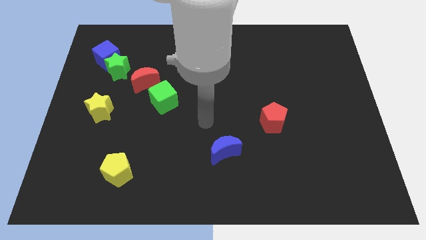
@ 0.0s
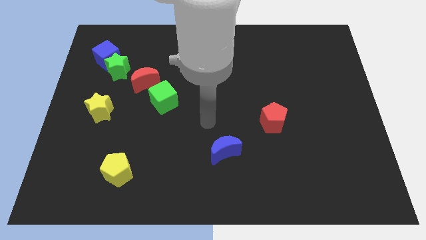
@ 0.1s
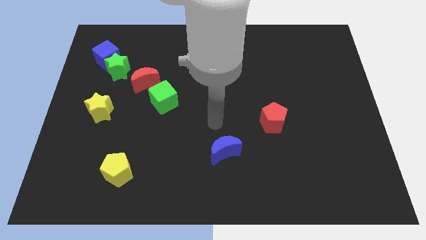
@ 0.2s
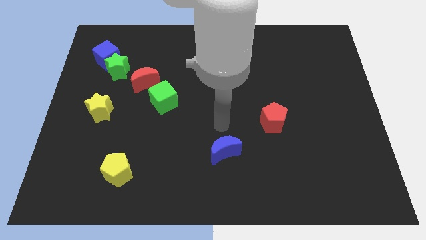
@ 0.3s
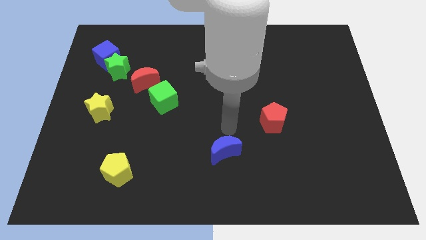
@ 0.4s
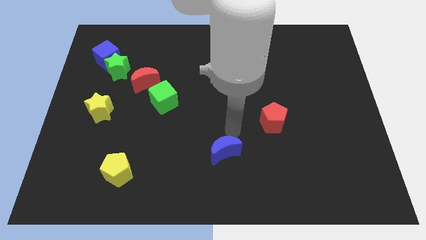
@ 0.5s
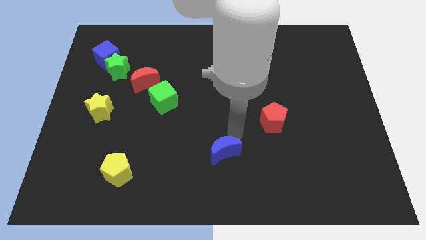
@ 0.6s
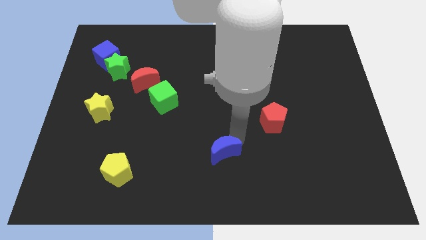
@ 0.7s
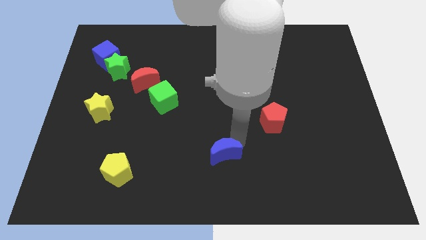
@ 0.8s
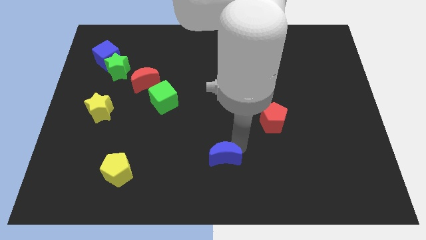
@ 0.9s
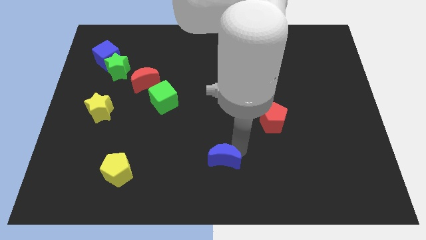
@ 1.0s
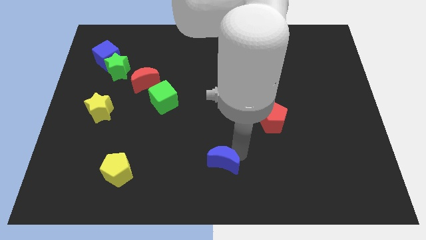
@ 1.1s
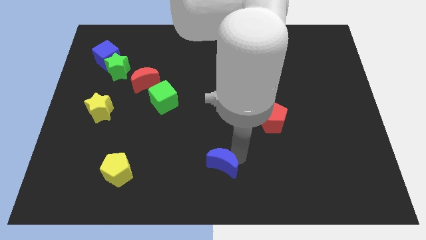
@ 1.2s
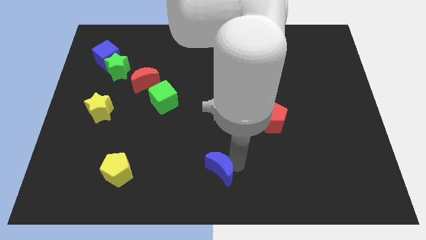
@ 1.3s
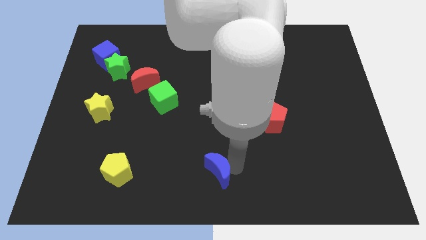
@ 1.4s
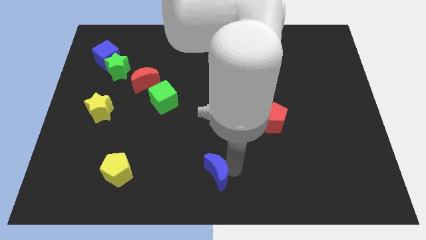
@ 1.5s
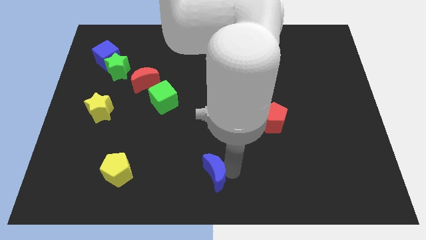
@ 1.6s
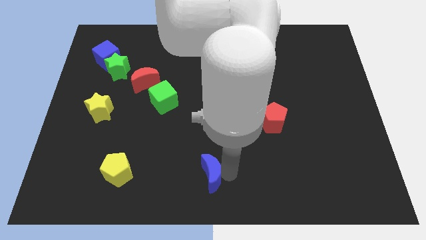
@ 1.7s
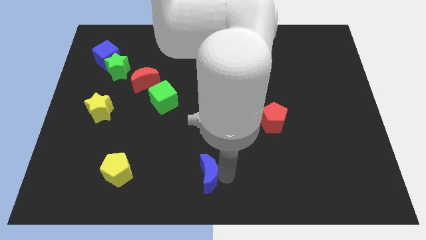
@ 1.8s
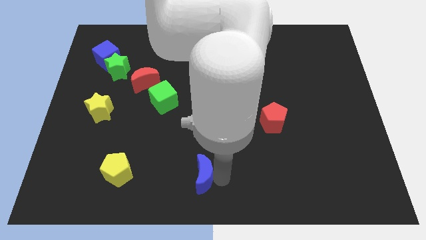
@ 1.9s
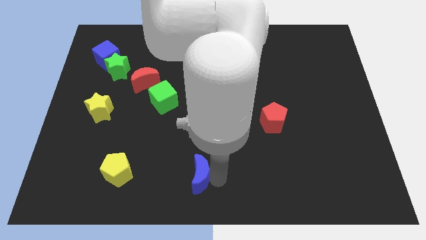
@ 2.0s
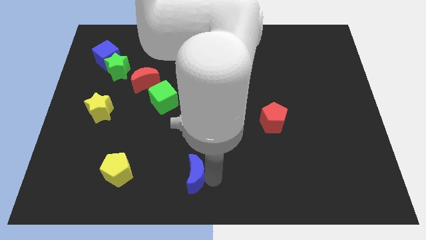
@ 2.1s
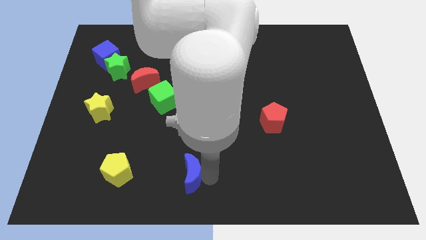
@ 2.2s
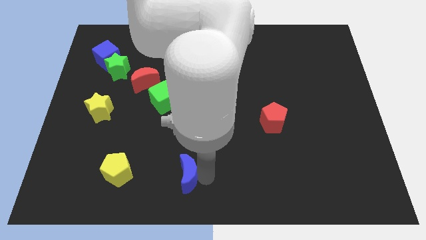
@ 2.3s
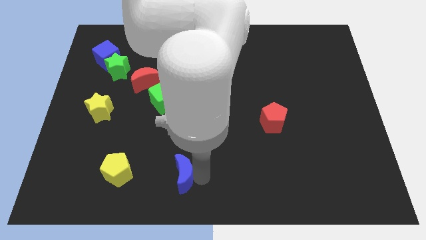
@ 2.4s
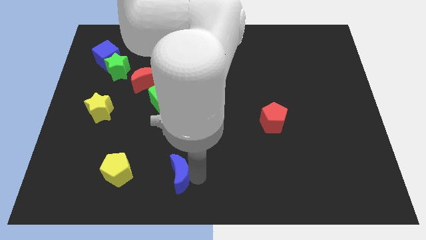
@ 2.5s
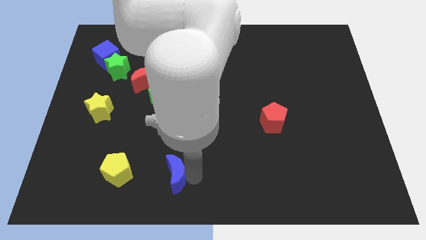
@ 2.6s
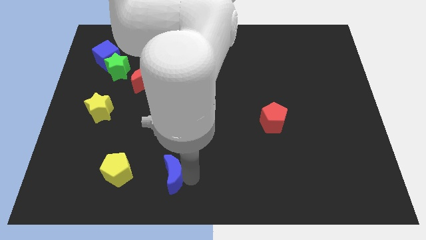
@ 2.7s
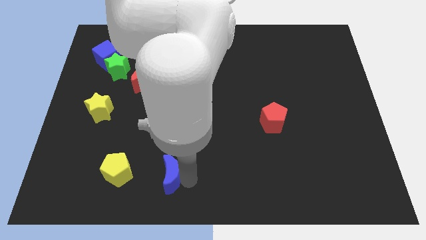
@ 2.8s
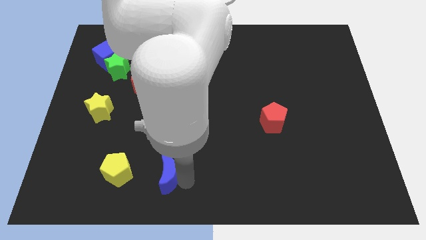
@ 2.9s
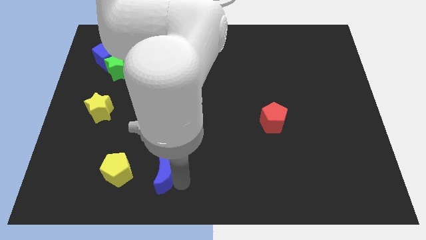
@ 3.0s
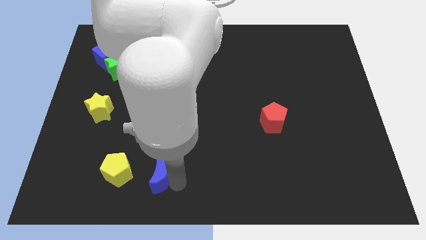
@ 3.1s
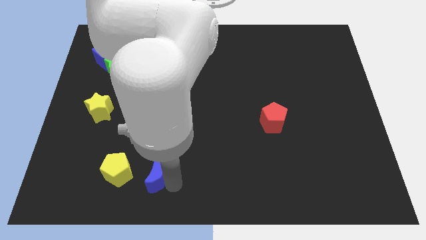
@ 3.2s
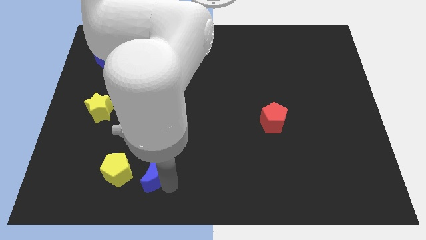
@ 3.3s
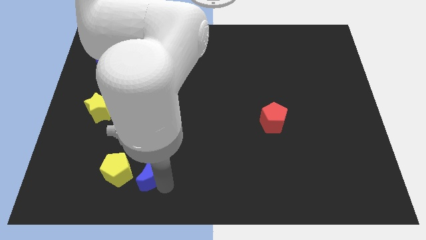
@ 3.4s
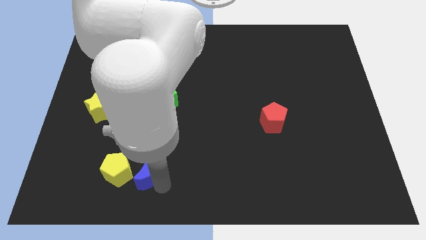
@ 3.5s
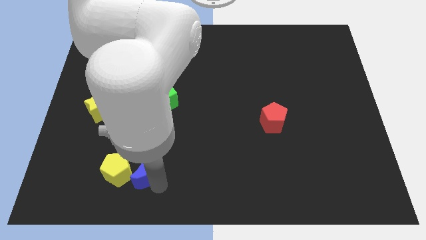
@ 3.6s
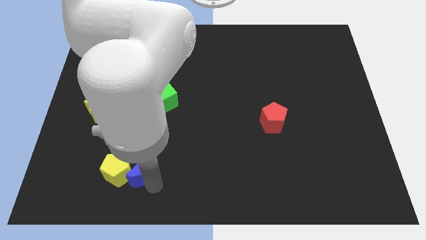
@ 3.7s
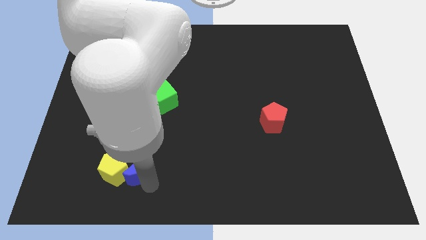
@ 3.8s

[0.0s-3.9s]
put the blue moon towards the yellow pentagon

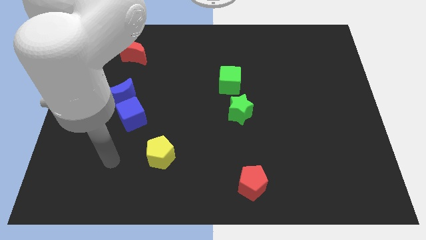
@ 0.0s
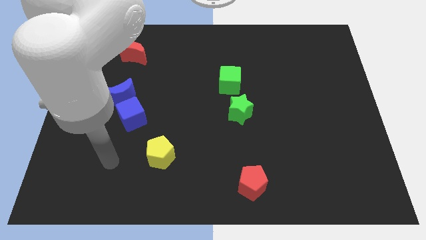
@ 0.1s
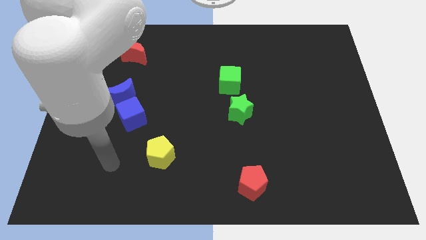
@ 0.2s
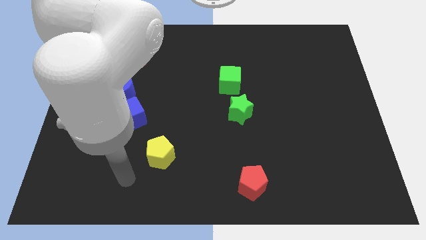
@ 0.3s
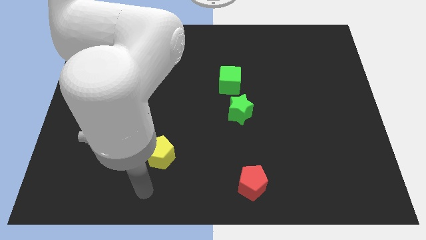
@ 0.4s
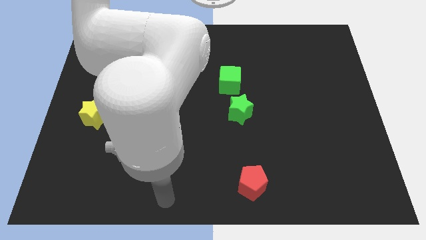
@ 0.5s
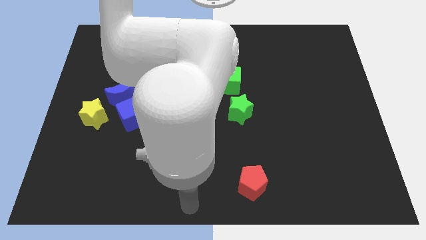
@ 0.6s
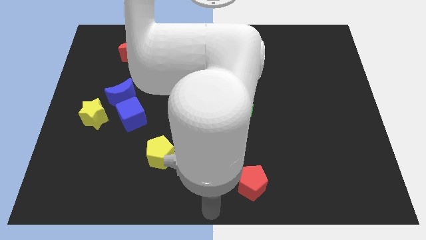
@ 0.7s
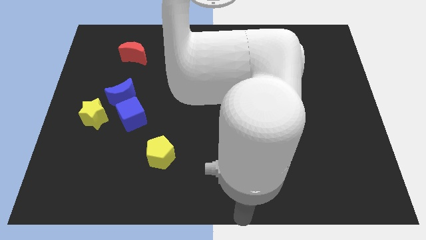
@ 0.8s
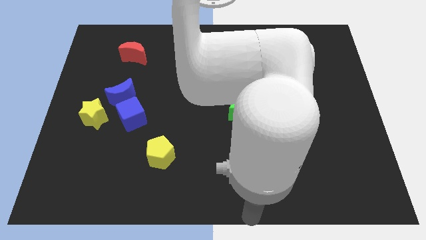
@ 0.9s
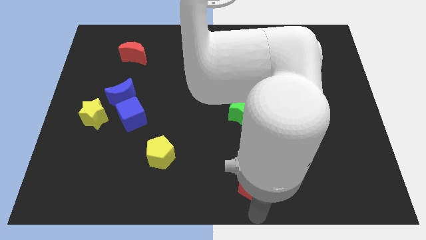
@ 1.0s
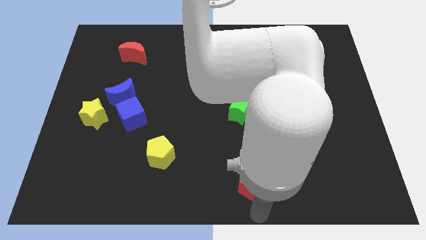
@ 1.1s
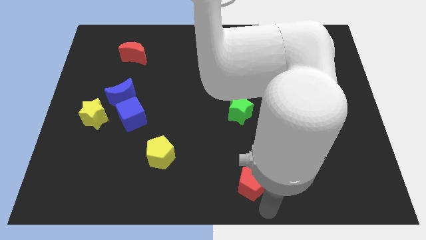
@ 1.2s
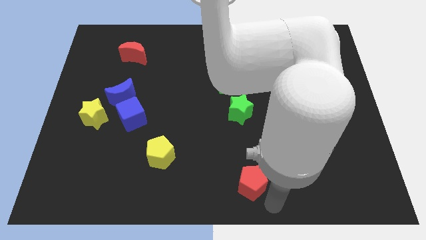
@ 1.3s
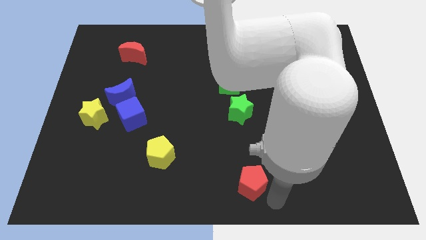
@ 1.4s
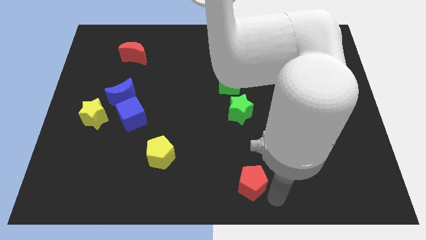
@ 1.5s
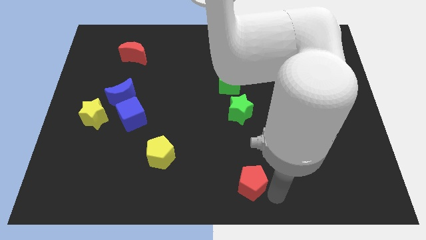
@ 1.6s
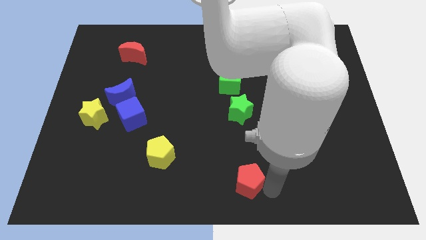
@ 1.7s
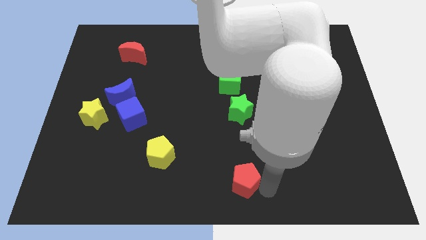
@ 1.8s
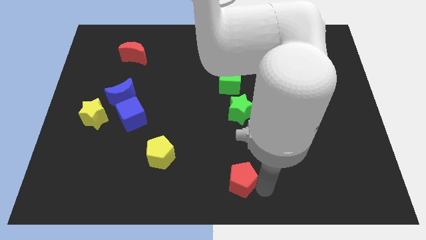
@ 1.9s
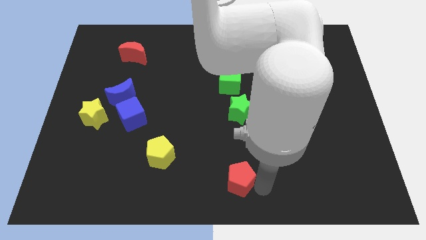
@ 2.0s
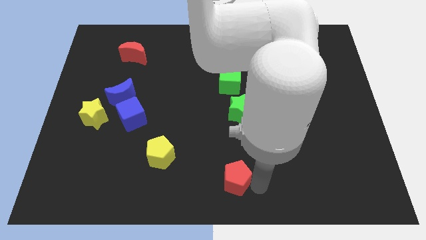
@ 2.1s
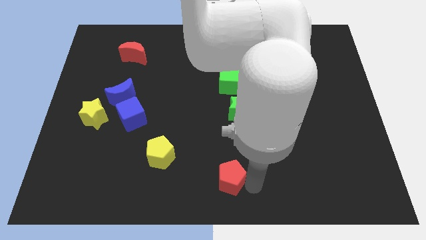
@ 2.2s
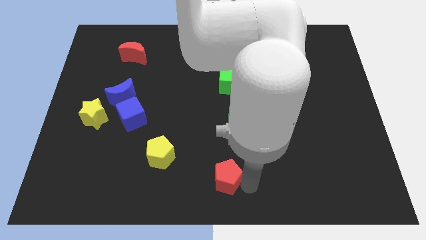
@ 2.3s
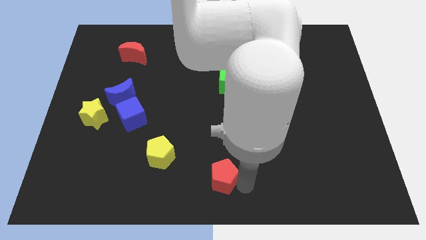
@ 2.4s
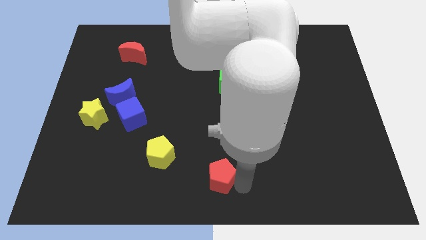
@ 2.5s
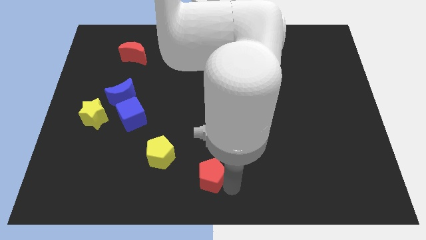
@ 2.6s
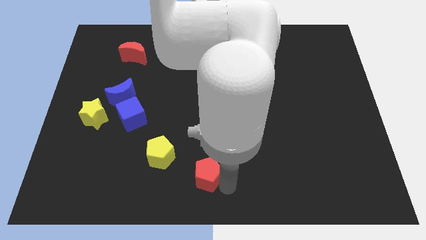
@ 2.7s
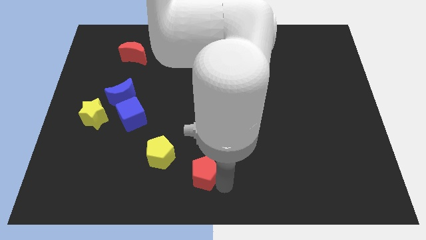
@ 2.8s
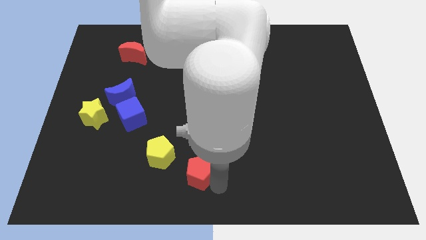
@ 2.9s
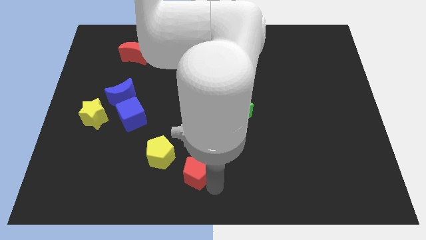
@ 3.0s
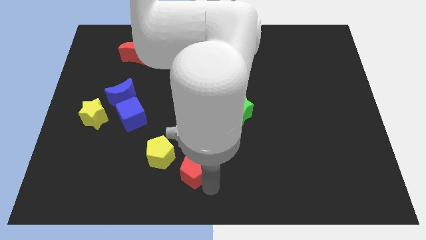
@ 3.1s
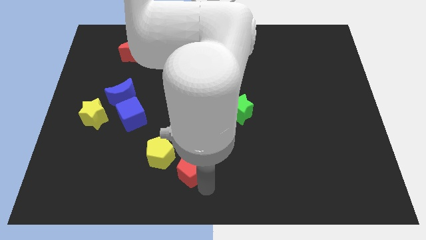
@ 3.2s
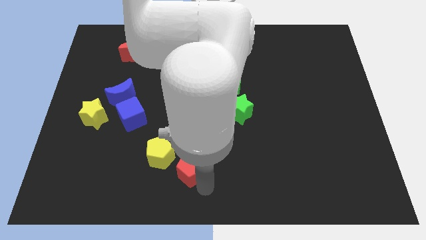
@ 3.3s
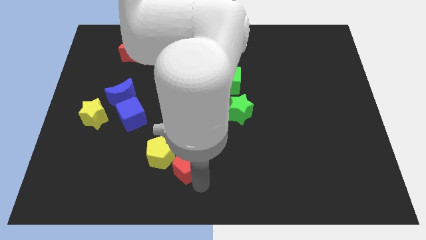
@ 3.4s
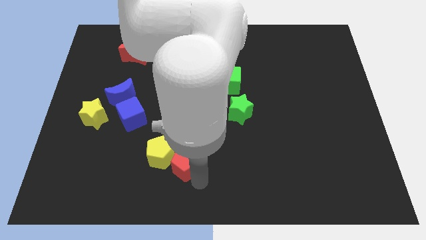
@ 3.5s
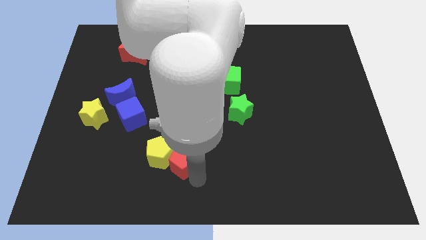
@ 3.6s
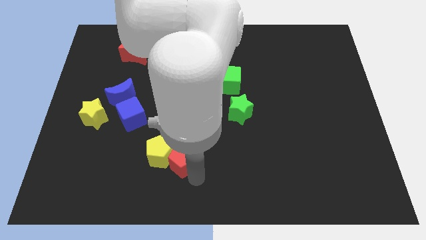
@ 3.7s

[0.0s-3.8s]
put the red pentagon towards the yellow pentagon
